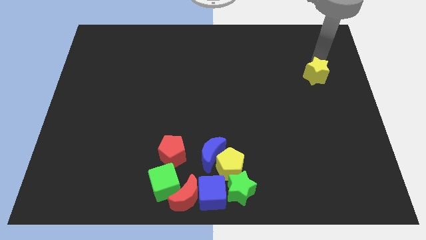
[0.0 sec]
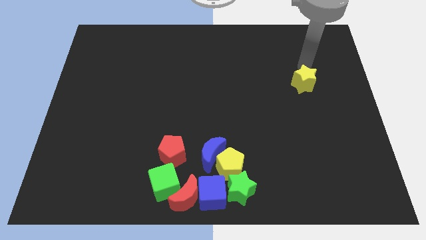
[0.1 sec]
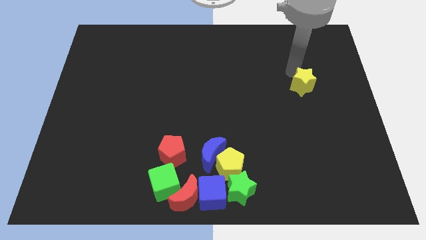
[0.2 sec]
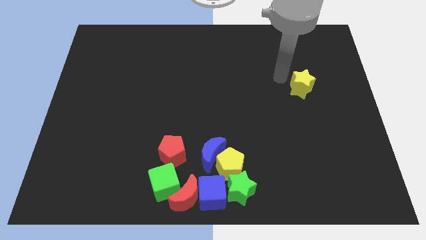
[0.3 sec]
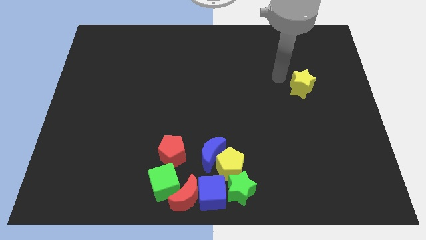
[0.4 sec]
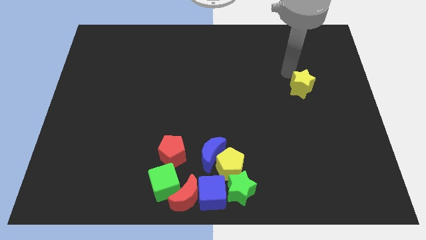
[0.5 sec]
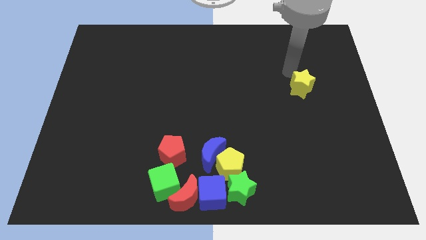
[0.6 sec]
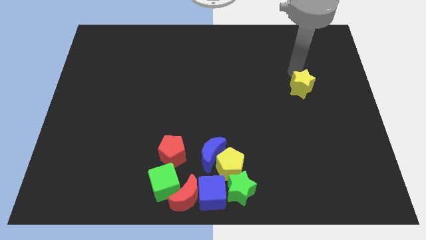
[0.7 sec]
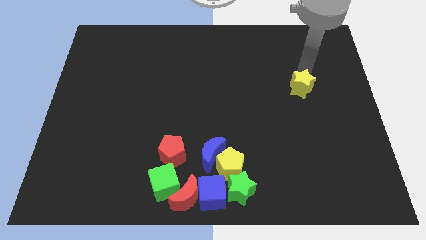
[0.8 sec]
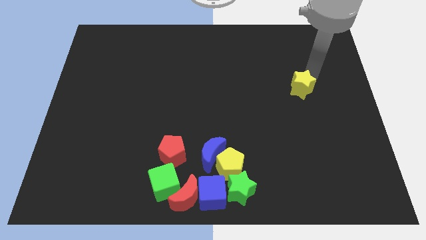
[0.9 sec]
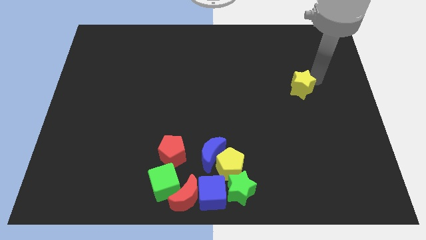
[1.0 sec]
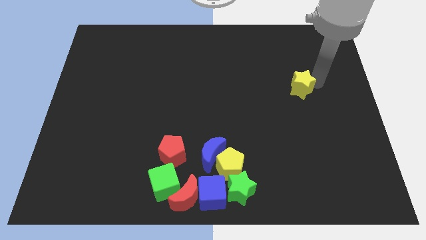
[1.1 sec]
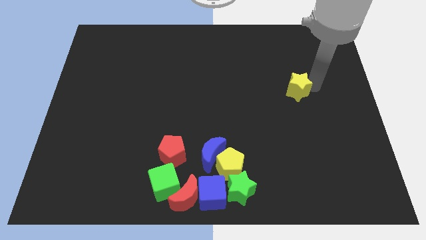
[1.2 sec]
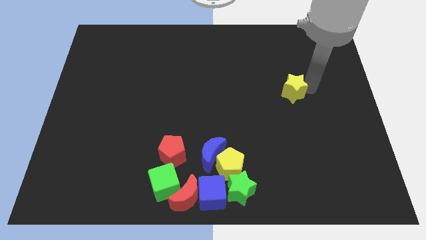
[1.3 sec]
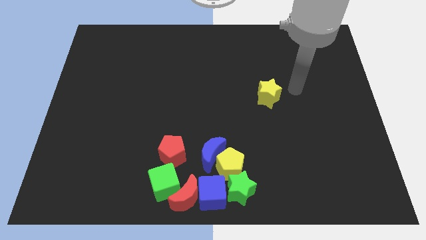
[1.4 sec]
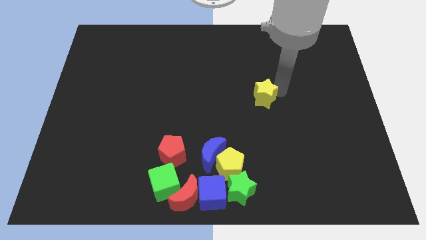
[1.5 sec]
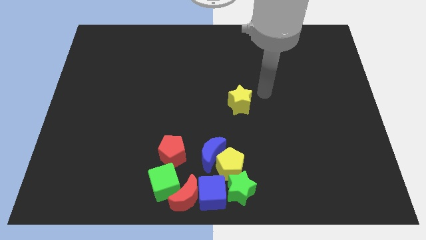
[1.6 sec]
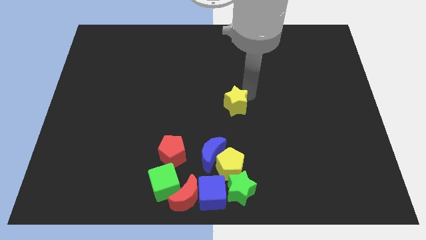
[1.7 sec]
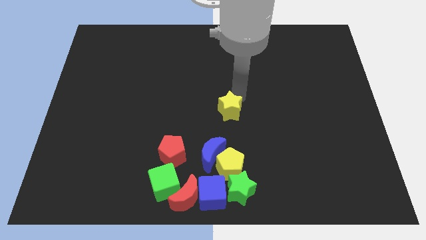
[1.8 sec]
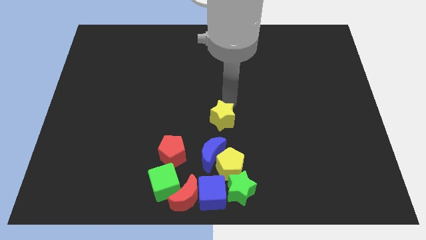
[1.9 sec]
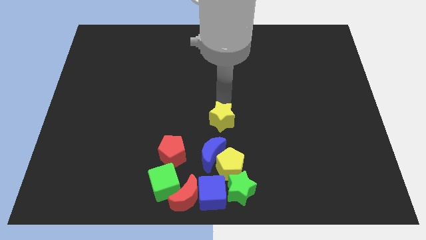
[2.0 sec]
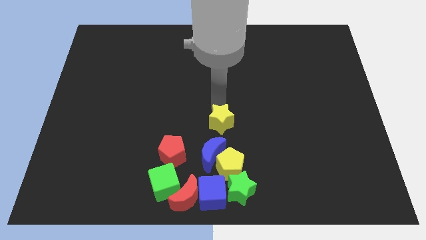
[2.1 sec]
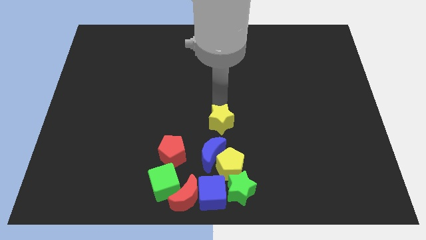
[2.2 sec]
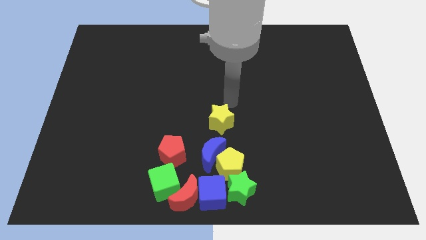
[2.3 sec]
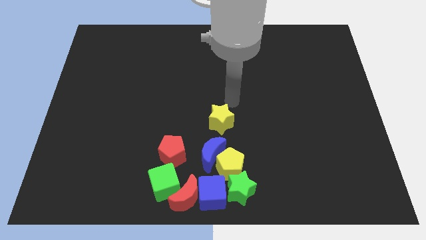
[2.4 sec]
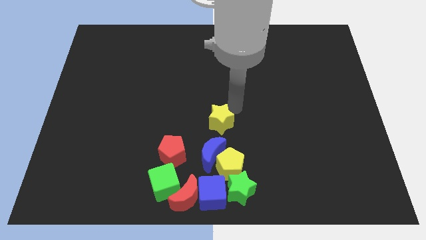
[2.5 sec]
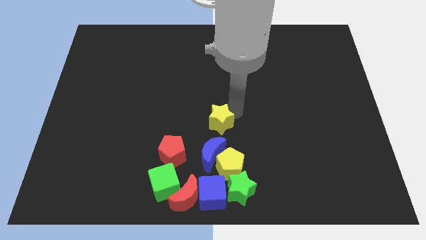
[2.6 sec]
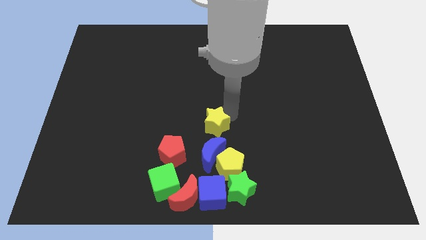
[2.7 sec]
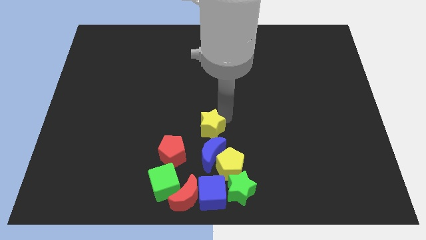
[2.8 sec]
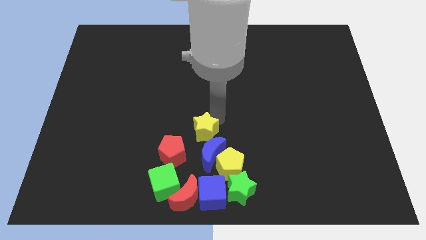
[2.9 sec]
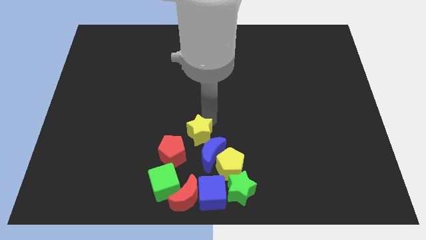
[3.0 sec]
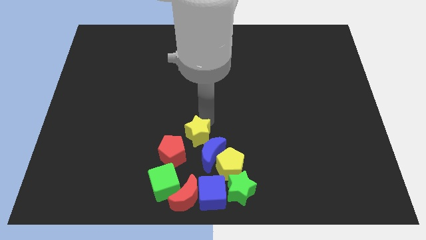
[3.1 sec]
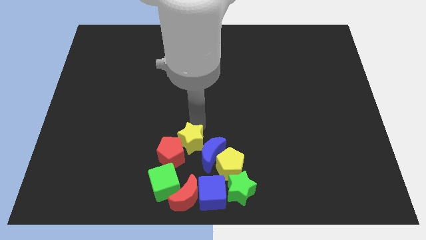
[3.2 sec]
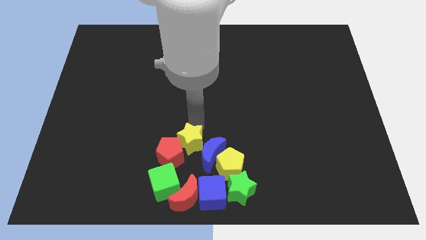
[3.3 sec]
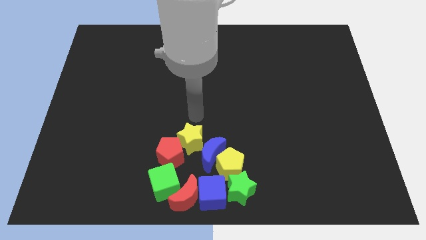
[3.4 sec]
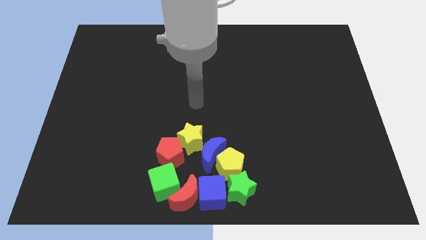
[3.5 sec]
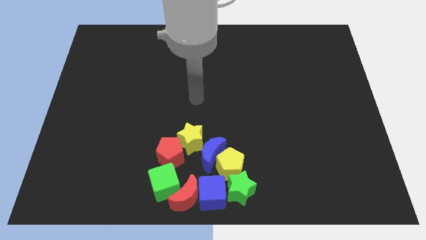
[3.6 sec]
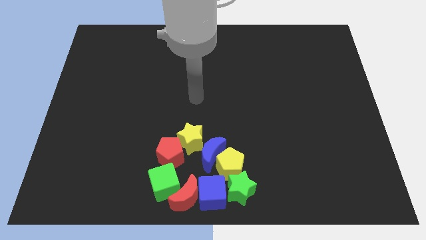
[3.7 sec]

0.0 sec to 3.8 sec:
push the yellow star vertically above the red moon

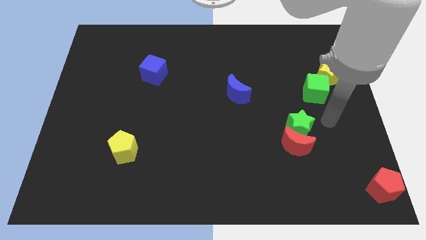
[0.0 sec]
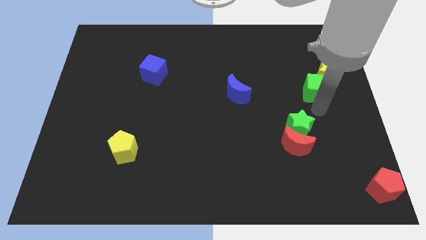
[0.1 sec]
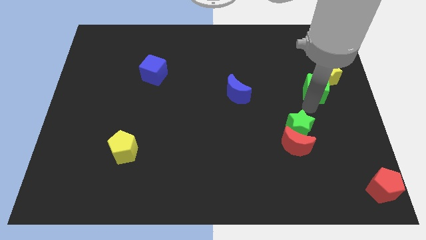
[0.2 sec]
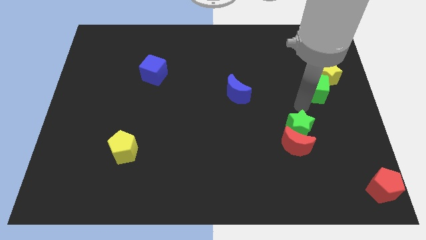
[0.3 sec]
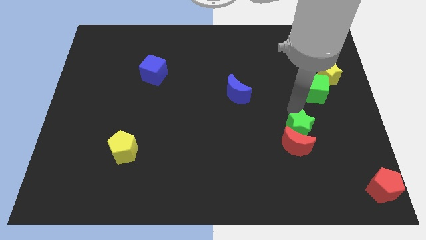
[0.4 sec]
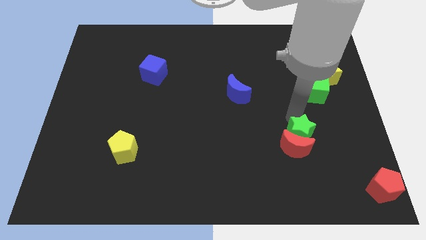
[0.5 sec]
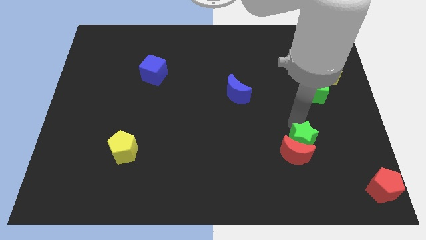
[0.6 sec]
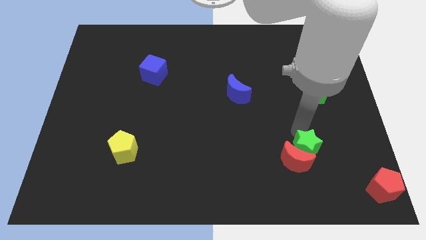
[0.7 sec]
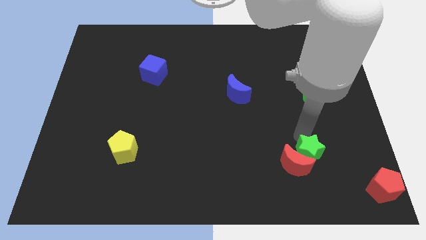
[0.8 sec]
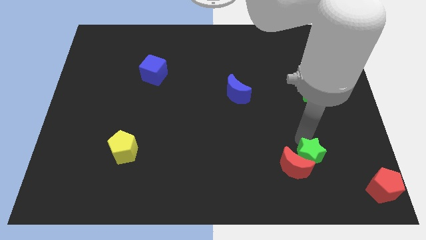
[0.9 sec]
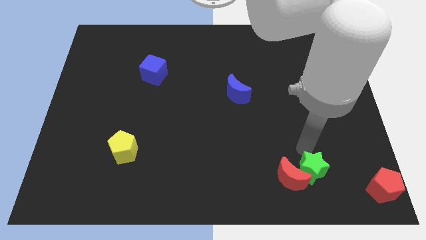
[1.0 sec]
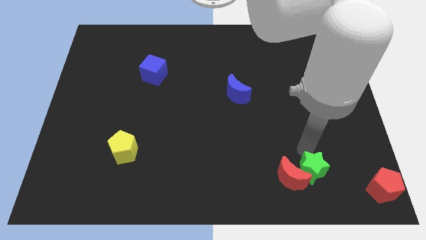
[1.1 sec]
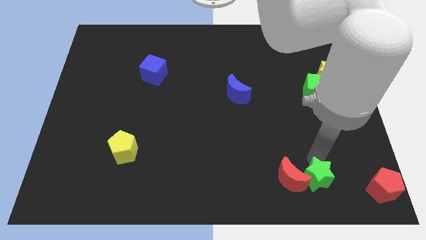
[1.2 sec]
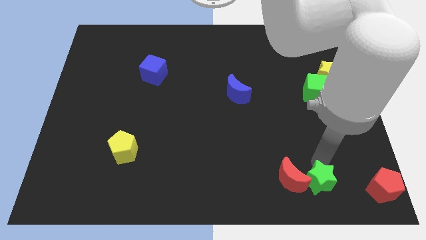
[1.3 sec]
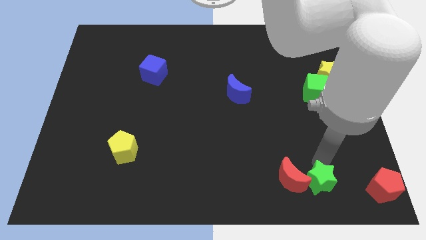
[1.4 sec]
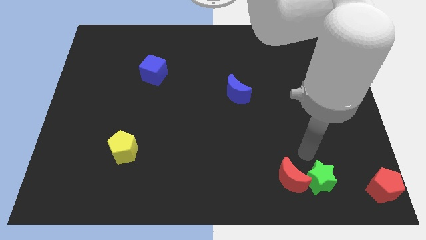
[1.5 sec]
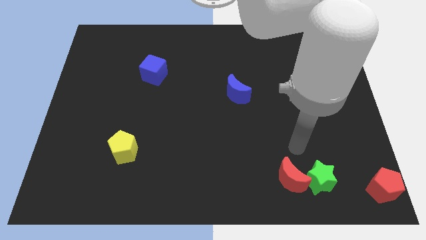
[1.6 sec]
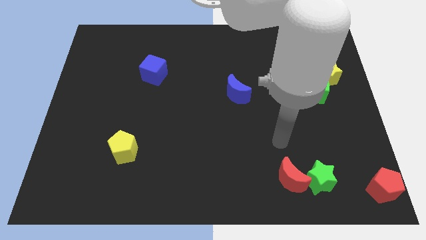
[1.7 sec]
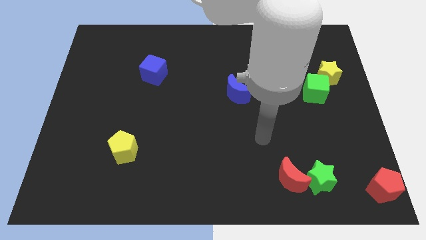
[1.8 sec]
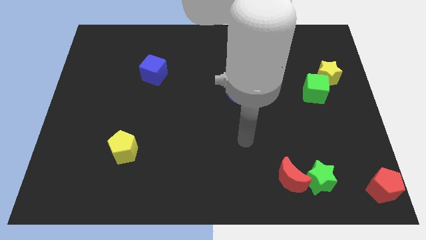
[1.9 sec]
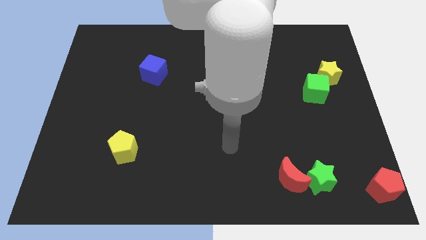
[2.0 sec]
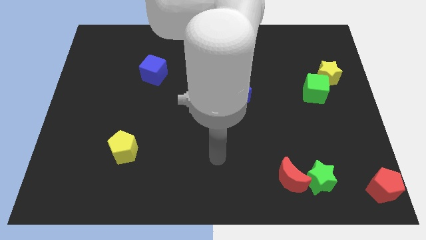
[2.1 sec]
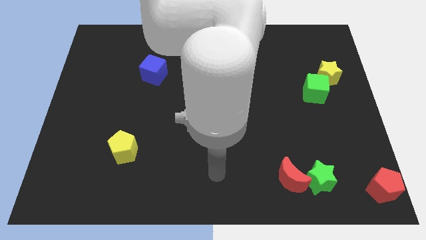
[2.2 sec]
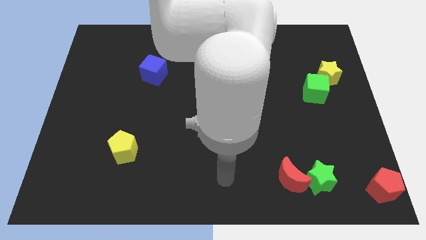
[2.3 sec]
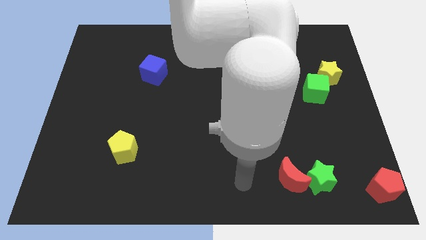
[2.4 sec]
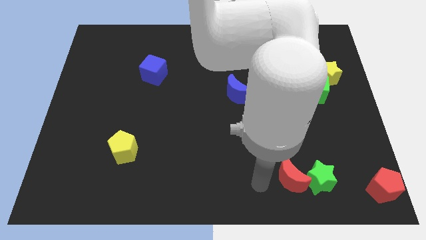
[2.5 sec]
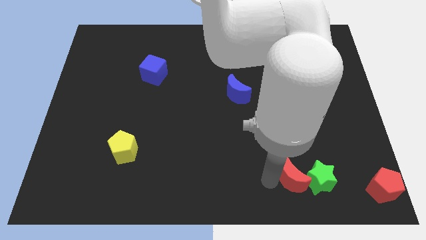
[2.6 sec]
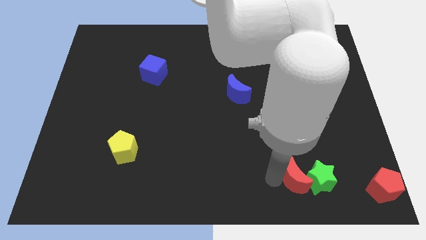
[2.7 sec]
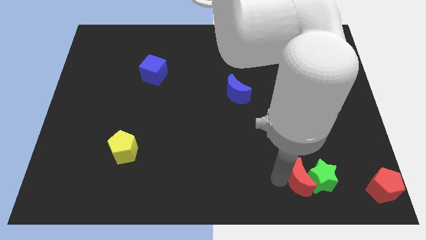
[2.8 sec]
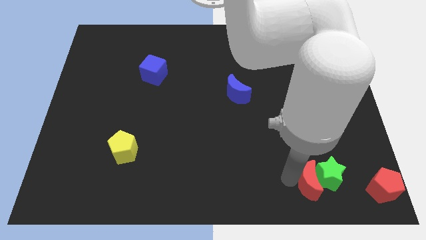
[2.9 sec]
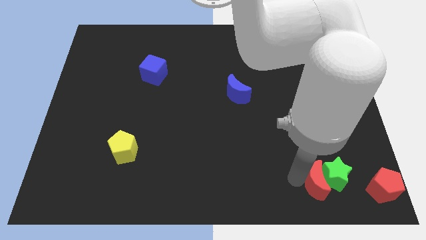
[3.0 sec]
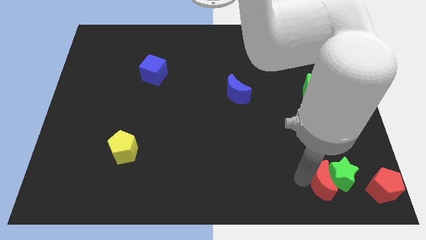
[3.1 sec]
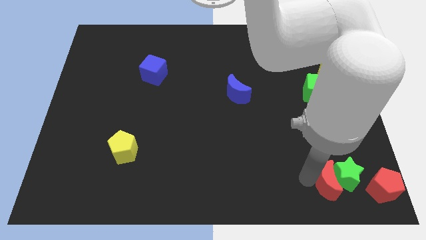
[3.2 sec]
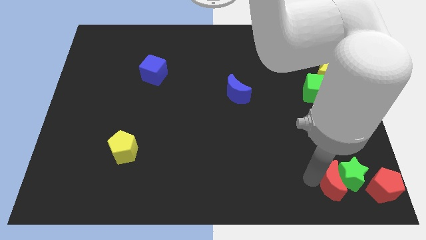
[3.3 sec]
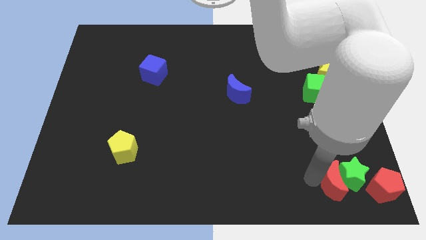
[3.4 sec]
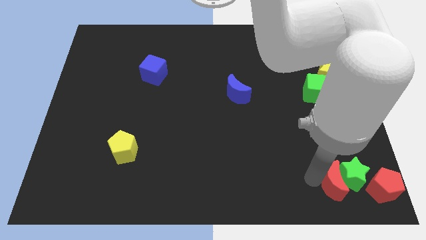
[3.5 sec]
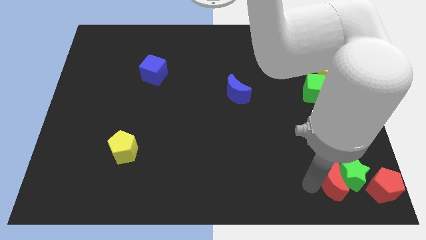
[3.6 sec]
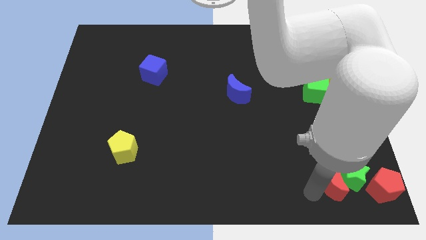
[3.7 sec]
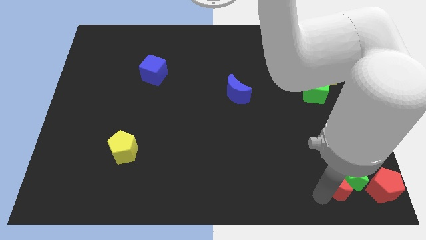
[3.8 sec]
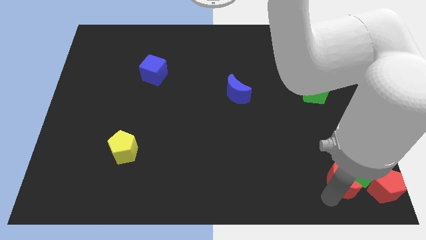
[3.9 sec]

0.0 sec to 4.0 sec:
move the green star towards the red moon

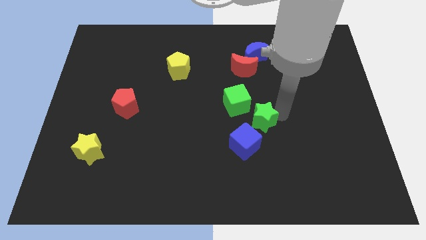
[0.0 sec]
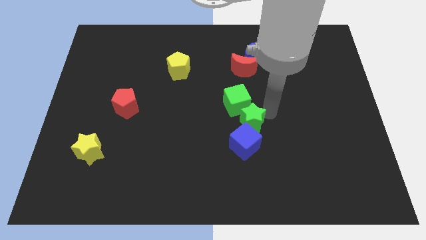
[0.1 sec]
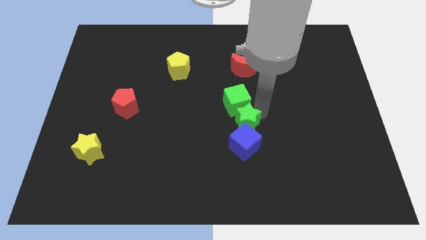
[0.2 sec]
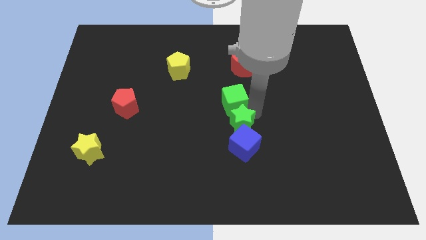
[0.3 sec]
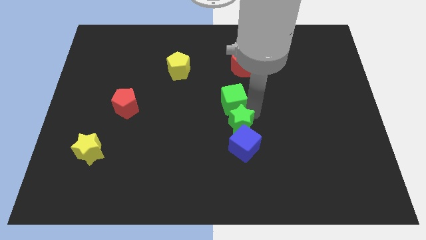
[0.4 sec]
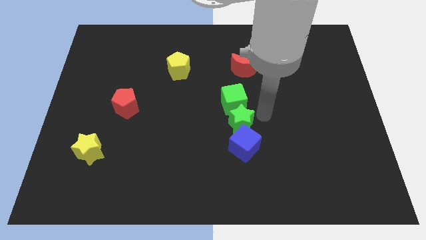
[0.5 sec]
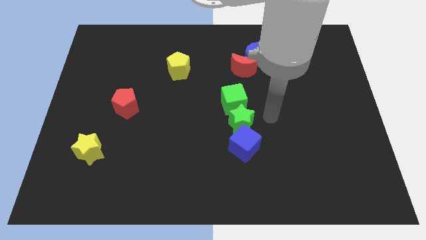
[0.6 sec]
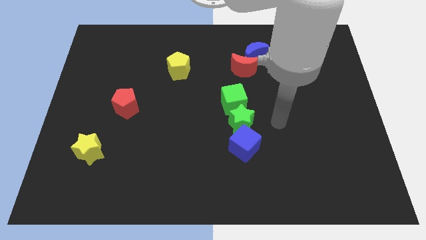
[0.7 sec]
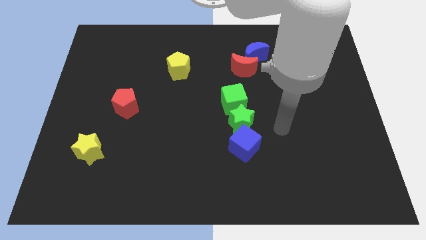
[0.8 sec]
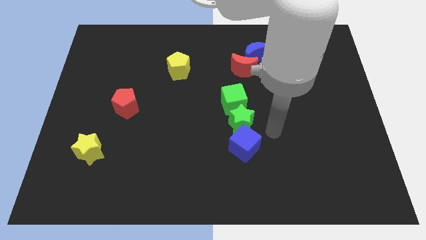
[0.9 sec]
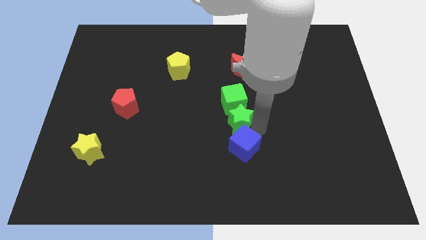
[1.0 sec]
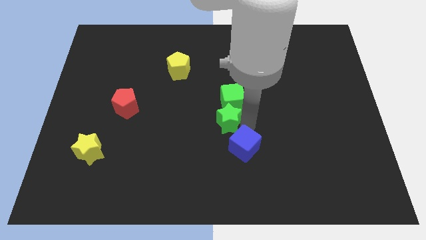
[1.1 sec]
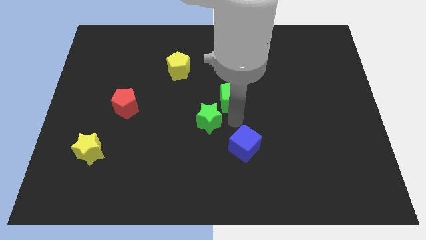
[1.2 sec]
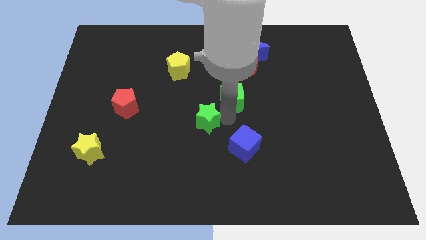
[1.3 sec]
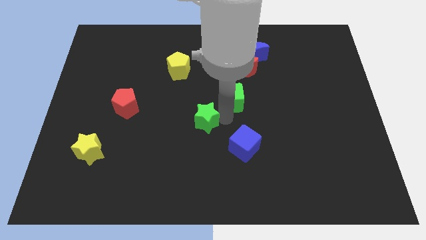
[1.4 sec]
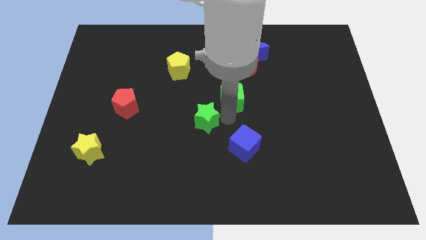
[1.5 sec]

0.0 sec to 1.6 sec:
push the green star towards the center of the board
